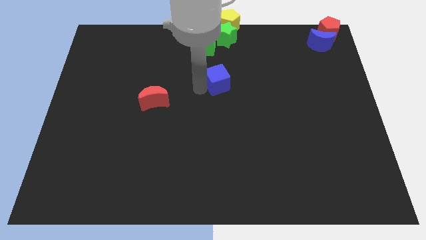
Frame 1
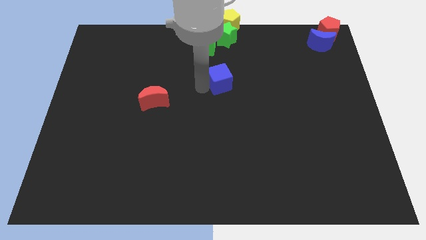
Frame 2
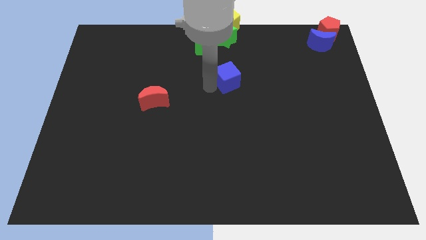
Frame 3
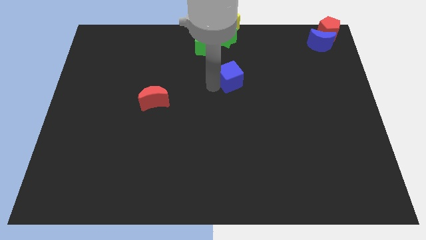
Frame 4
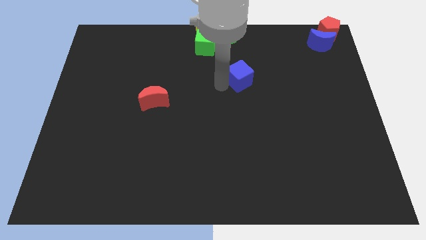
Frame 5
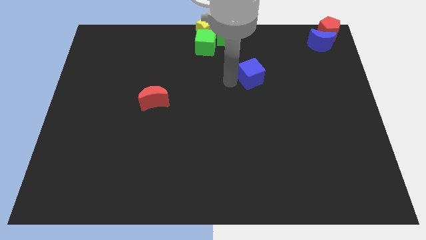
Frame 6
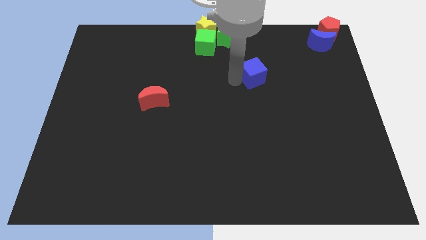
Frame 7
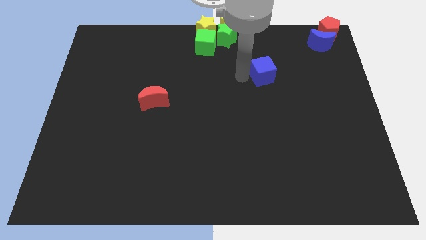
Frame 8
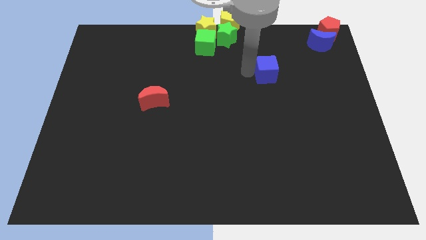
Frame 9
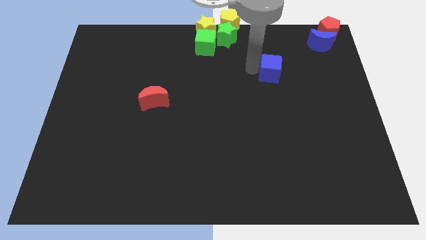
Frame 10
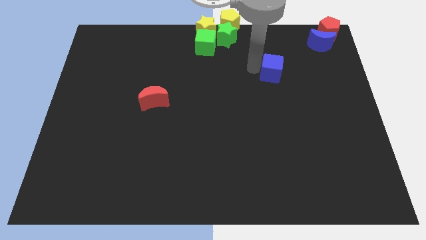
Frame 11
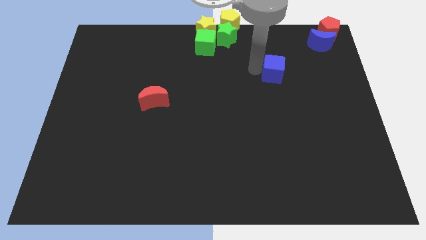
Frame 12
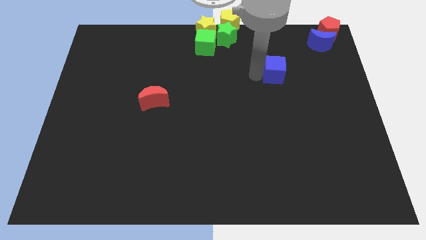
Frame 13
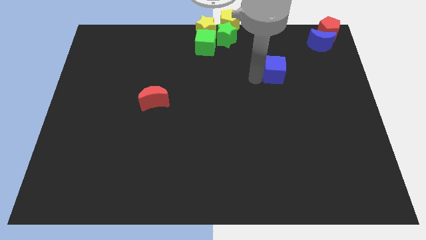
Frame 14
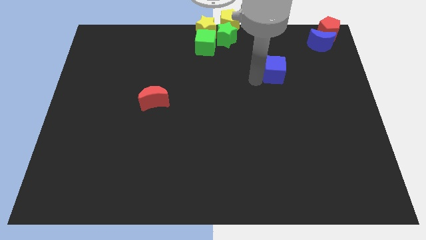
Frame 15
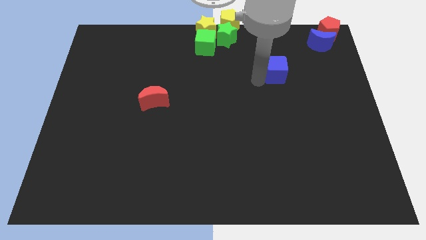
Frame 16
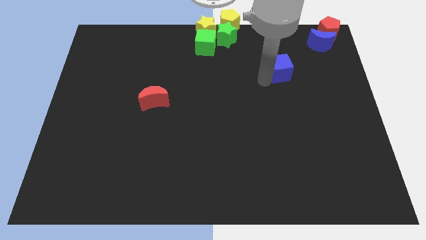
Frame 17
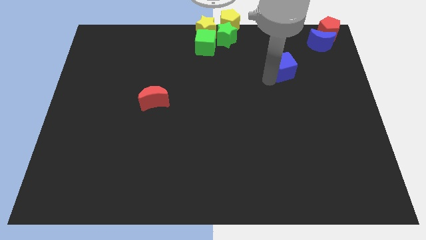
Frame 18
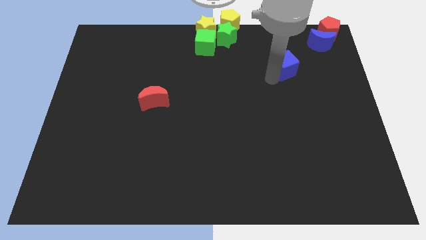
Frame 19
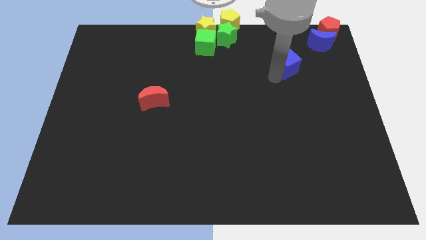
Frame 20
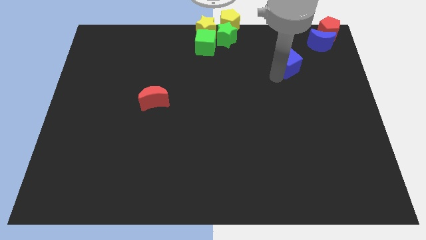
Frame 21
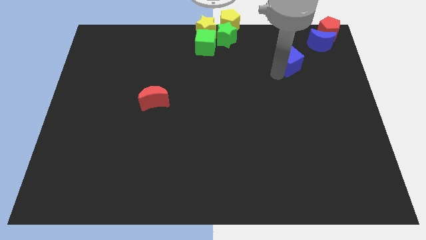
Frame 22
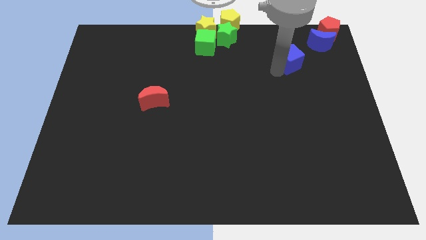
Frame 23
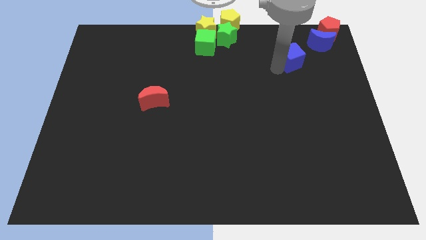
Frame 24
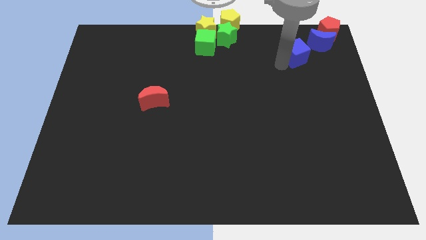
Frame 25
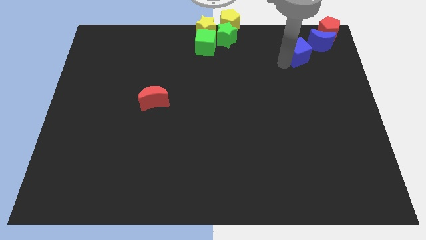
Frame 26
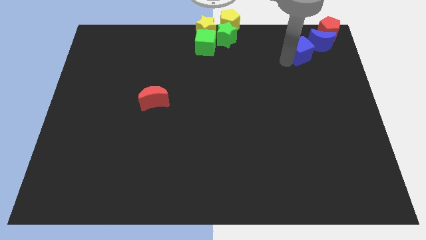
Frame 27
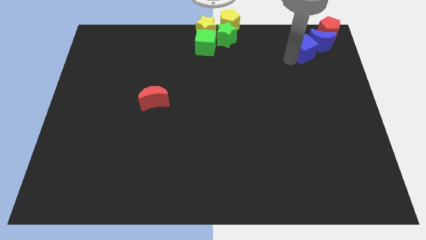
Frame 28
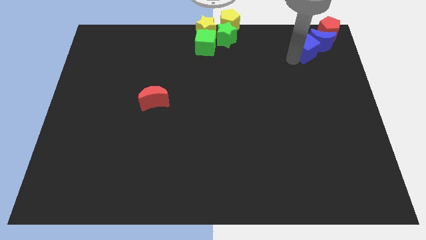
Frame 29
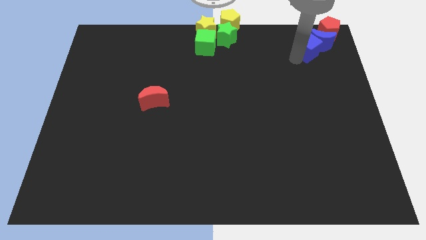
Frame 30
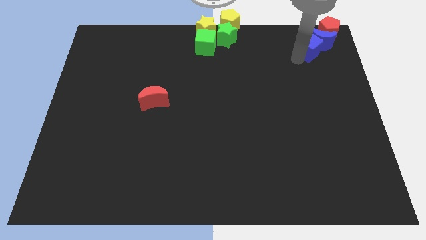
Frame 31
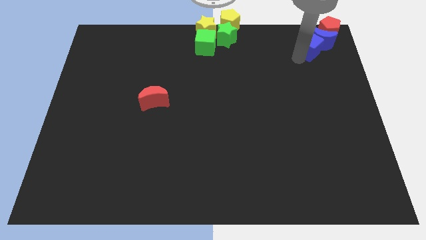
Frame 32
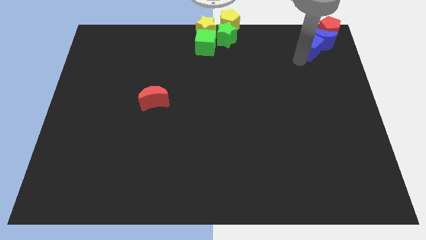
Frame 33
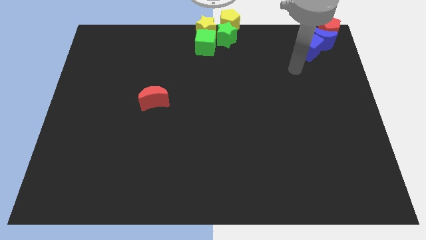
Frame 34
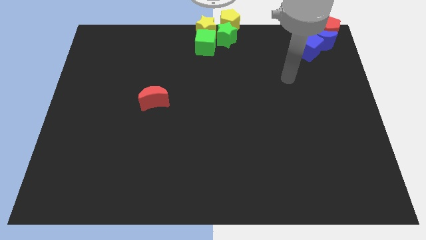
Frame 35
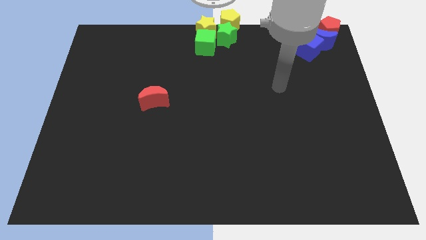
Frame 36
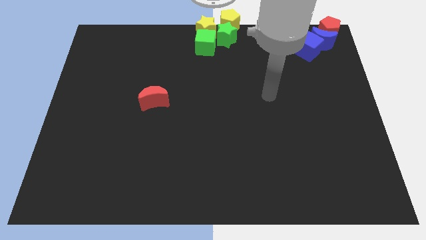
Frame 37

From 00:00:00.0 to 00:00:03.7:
drag the blue cube close to blue crescent

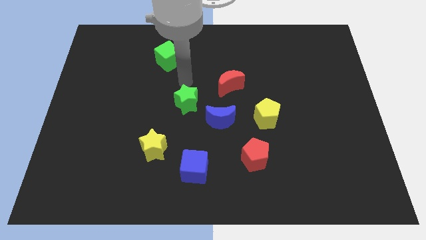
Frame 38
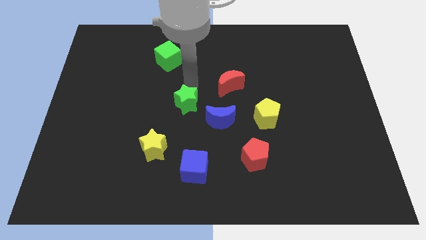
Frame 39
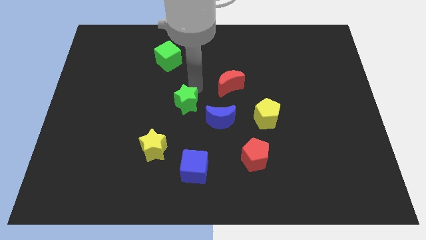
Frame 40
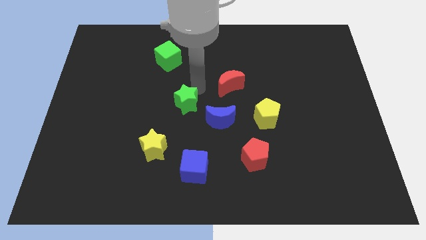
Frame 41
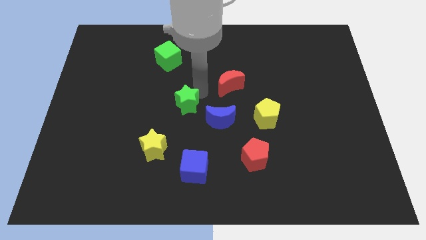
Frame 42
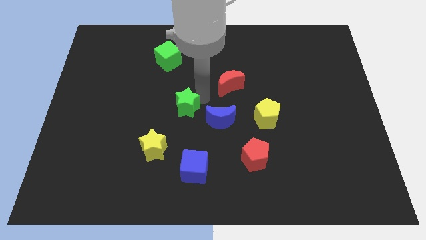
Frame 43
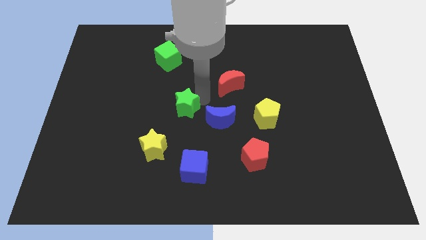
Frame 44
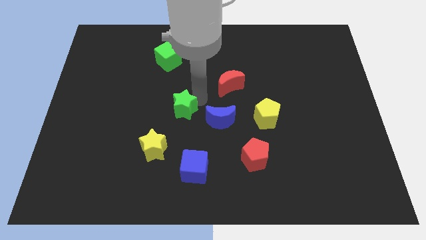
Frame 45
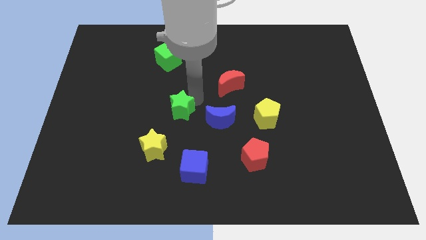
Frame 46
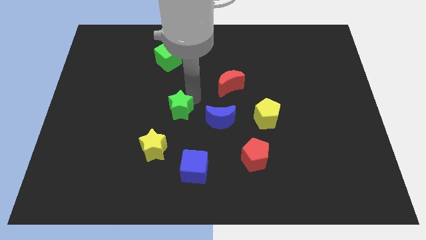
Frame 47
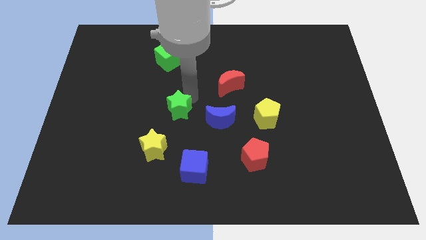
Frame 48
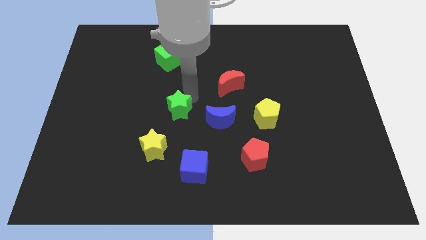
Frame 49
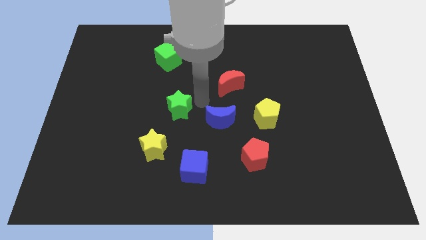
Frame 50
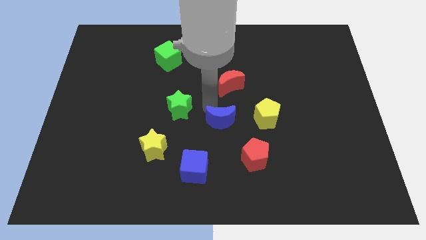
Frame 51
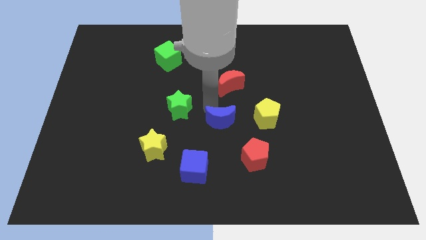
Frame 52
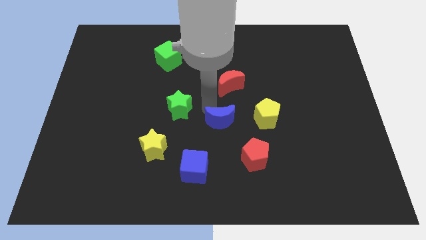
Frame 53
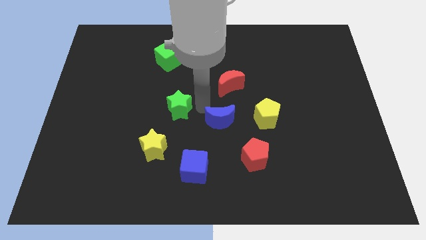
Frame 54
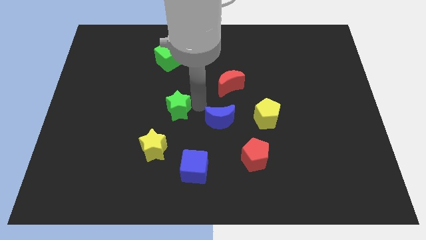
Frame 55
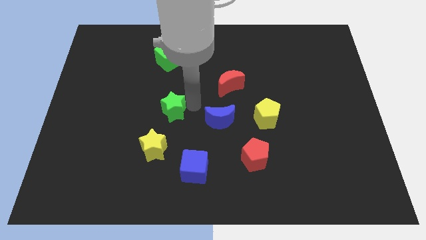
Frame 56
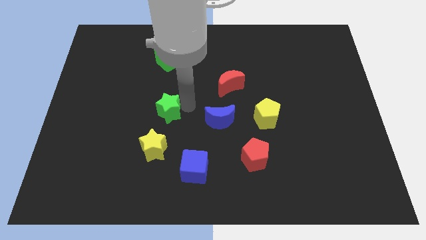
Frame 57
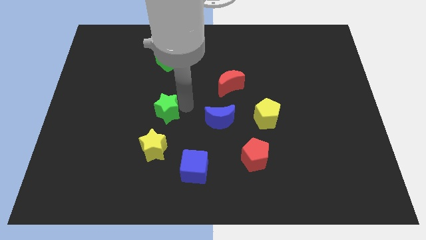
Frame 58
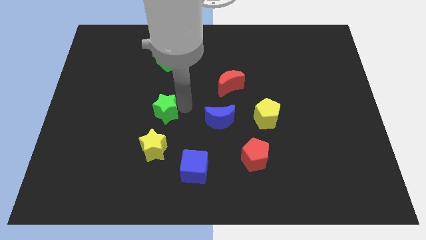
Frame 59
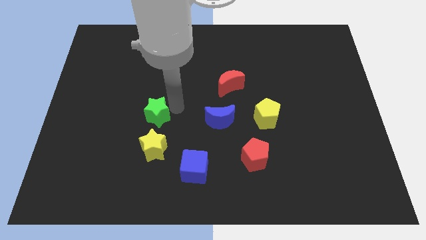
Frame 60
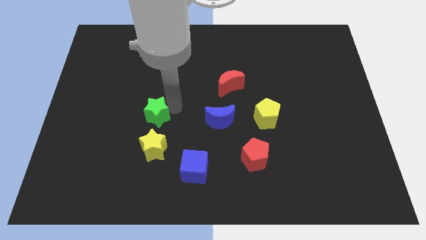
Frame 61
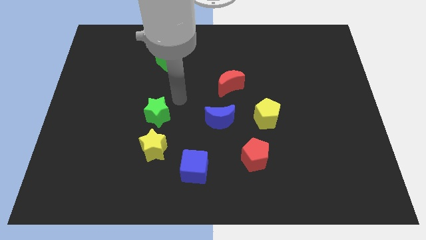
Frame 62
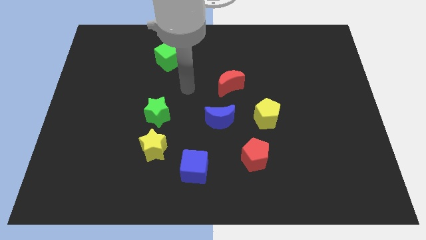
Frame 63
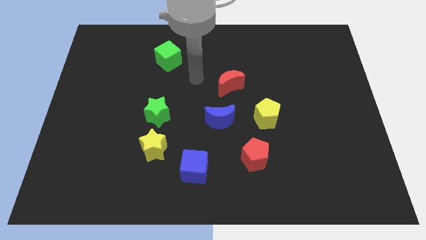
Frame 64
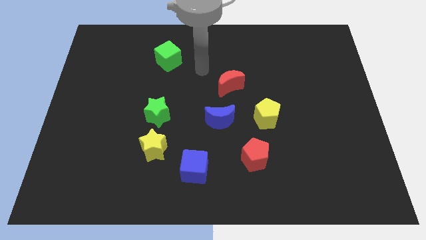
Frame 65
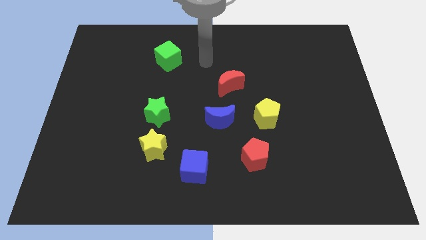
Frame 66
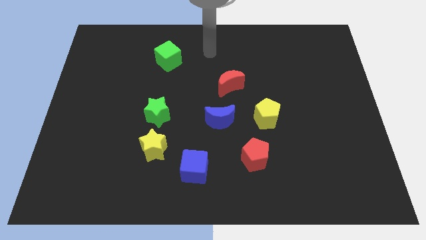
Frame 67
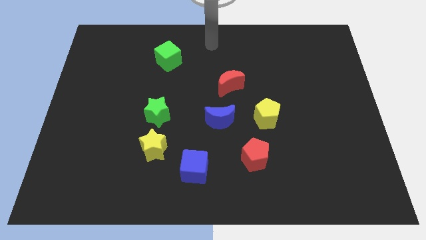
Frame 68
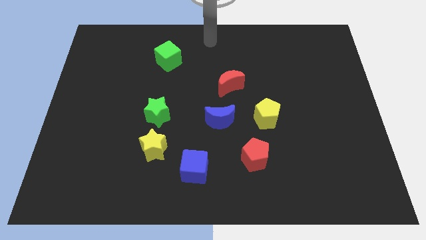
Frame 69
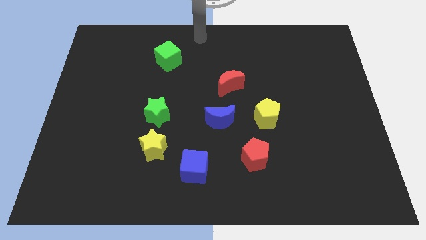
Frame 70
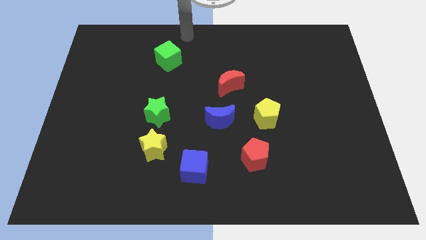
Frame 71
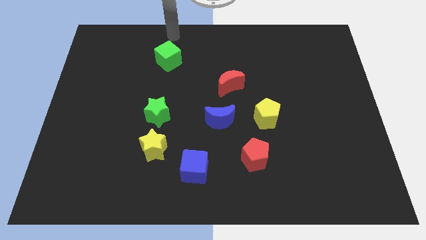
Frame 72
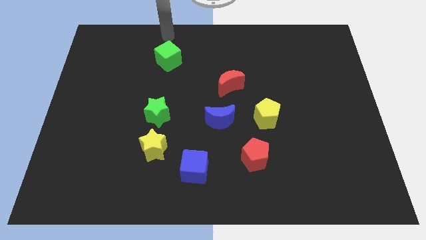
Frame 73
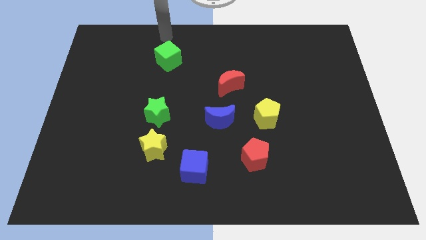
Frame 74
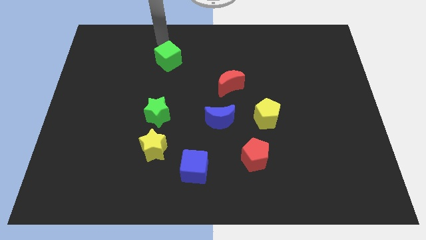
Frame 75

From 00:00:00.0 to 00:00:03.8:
place the green star in between the green cube and the yellow star to form a vertical line

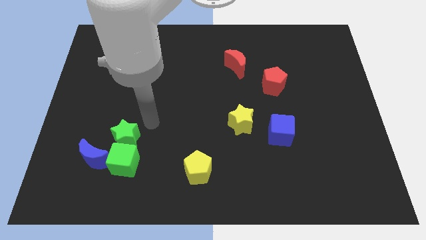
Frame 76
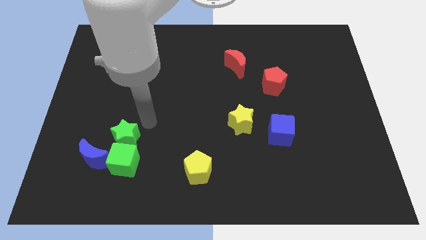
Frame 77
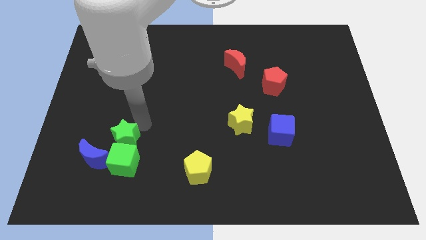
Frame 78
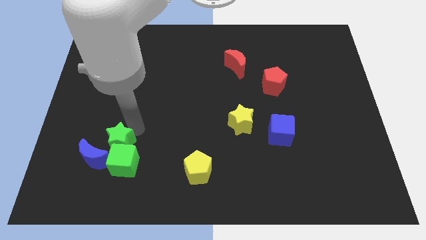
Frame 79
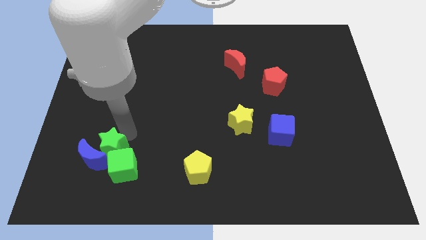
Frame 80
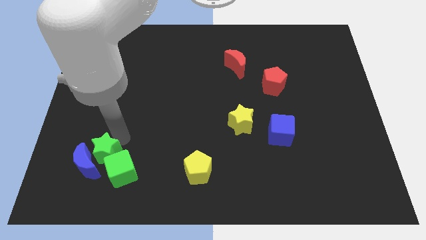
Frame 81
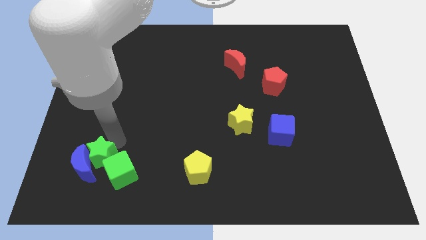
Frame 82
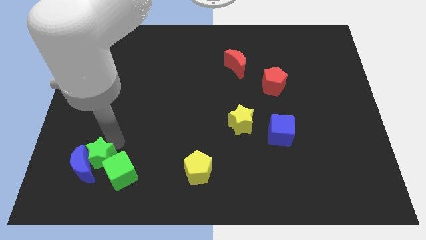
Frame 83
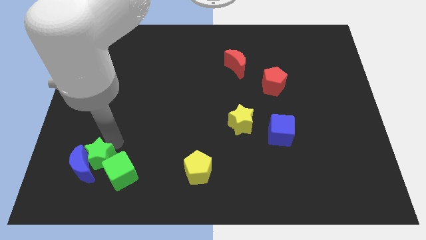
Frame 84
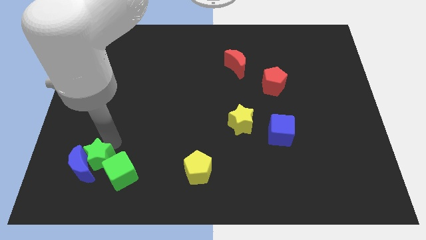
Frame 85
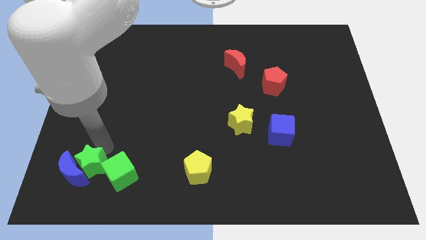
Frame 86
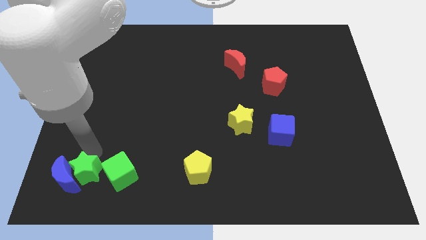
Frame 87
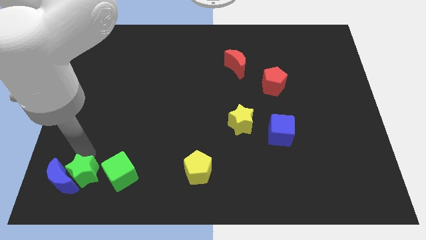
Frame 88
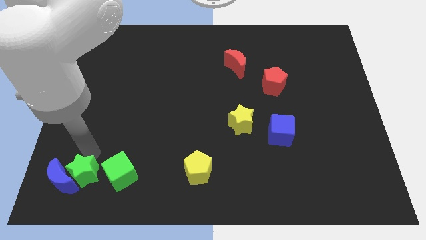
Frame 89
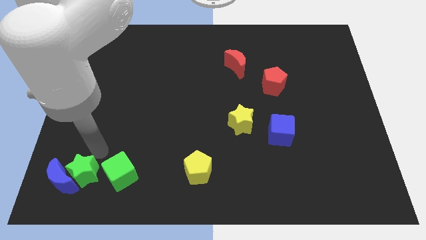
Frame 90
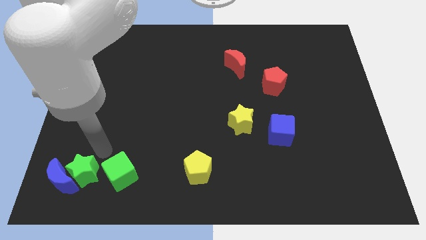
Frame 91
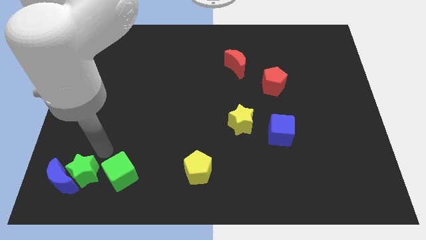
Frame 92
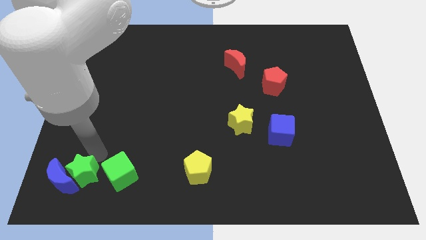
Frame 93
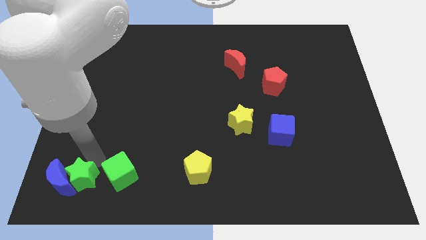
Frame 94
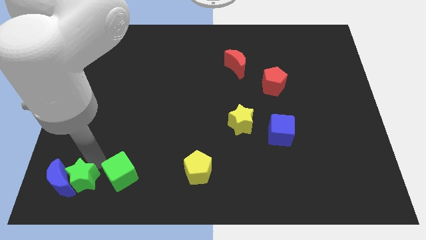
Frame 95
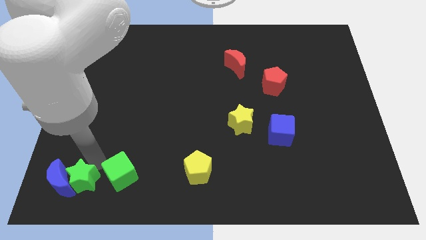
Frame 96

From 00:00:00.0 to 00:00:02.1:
place the green star and blue moon to the left side of the green cube
